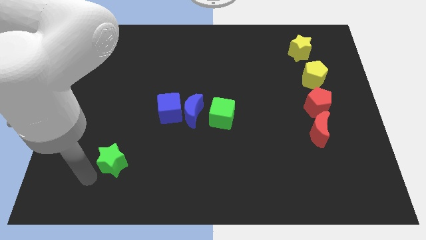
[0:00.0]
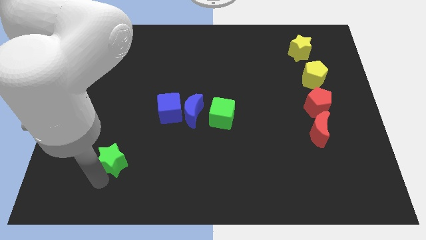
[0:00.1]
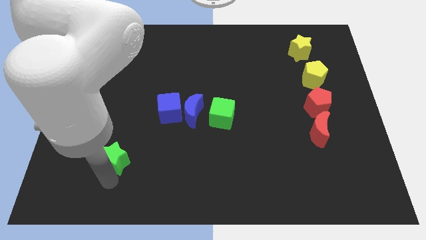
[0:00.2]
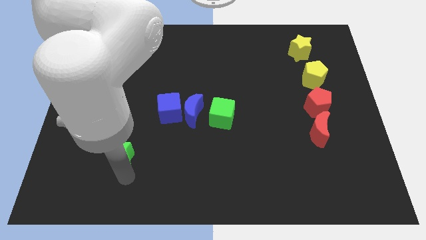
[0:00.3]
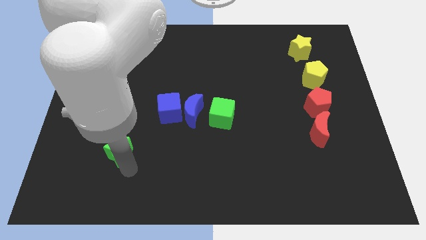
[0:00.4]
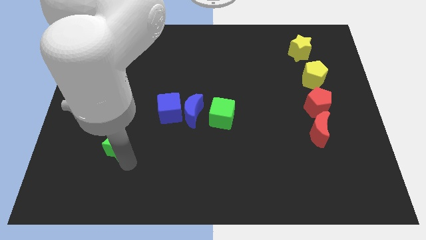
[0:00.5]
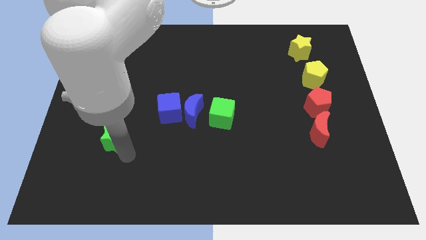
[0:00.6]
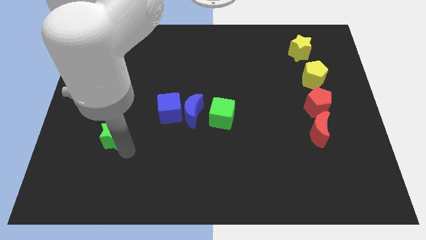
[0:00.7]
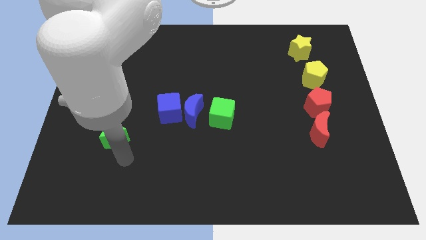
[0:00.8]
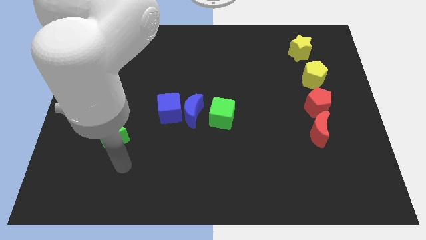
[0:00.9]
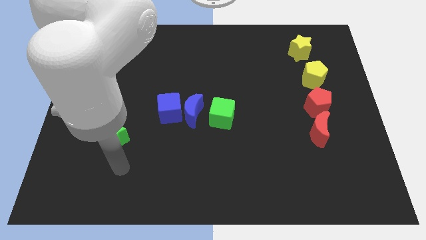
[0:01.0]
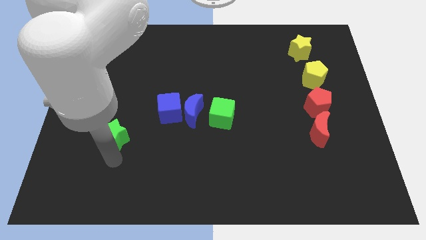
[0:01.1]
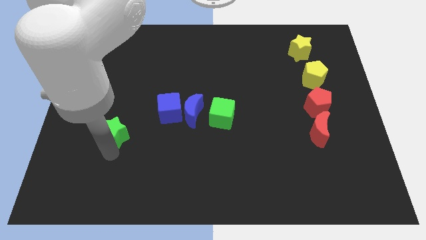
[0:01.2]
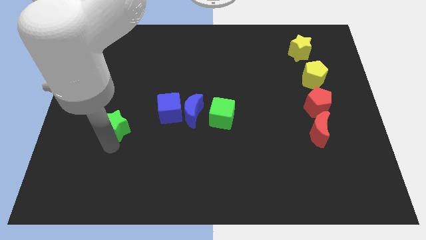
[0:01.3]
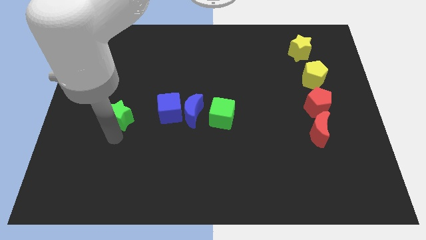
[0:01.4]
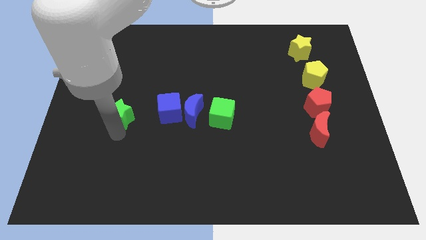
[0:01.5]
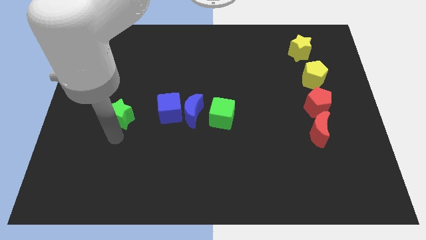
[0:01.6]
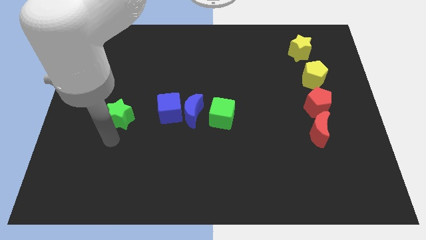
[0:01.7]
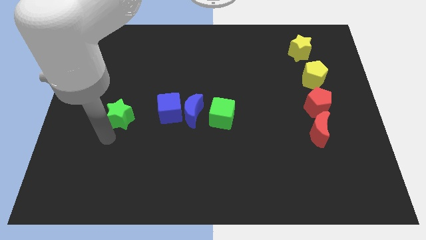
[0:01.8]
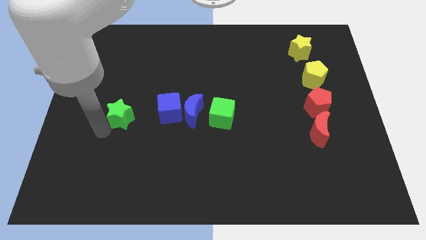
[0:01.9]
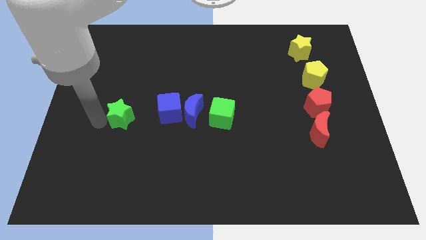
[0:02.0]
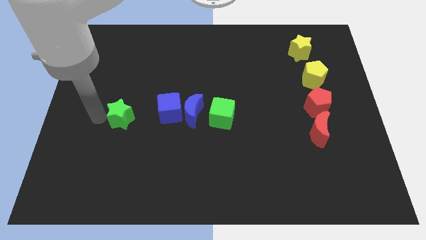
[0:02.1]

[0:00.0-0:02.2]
slide green star to left of blue cube

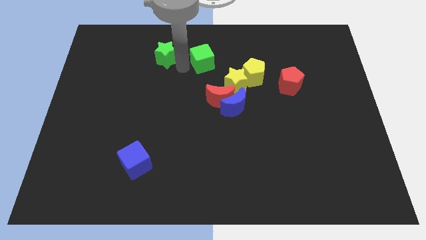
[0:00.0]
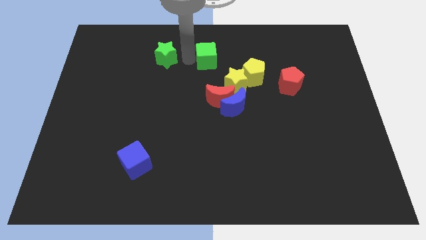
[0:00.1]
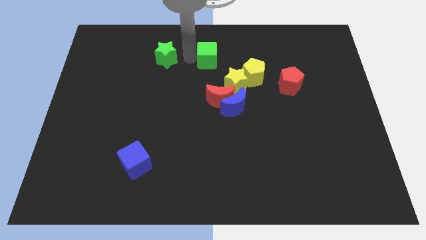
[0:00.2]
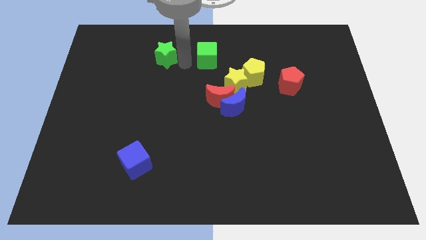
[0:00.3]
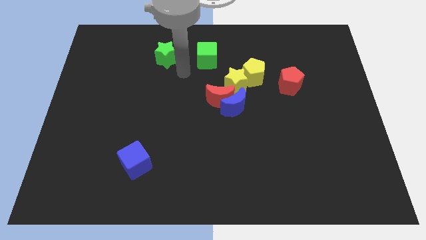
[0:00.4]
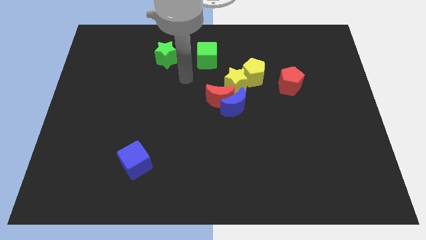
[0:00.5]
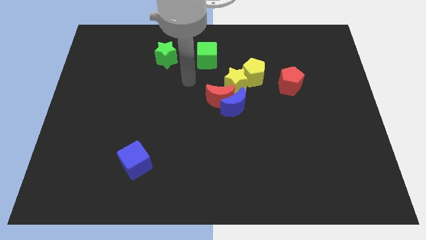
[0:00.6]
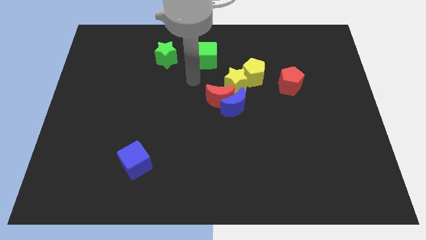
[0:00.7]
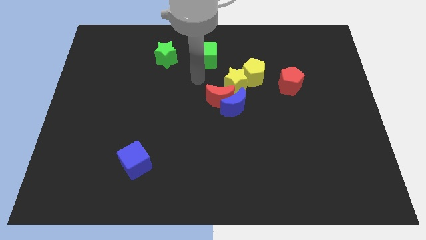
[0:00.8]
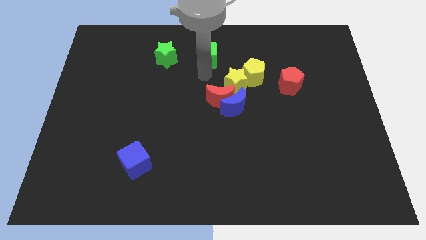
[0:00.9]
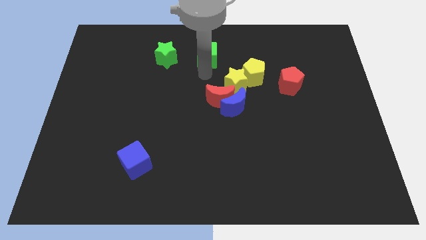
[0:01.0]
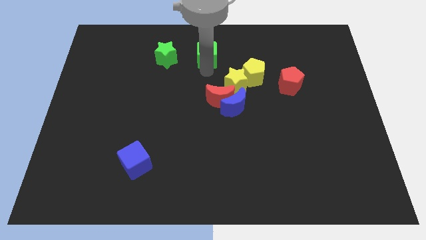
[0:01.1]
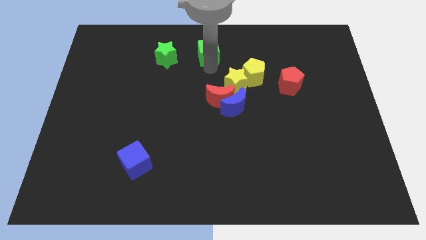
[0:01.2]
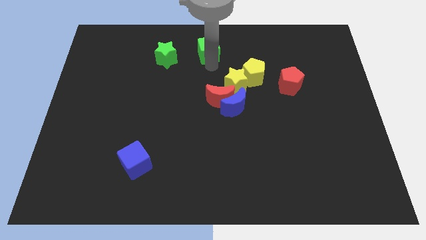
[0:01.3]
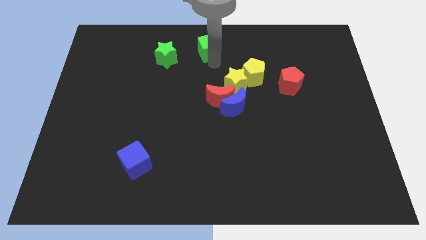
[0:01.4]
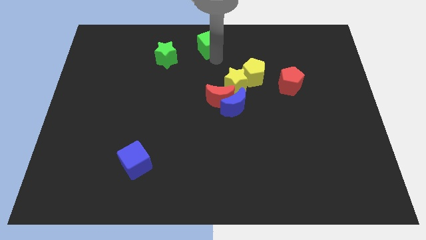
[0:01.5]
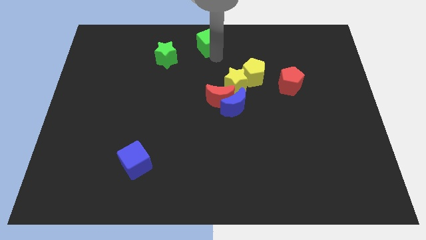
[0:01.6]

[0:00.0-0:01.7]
place green cube on the top center

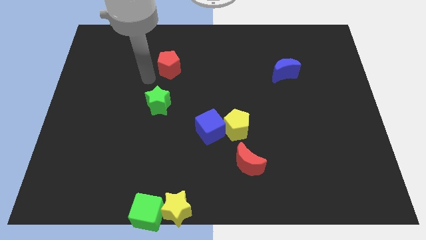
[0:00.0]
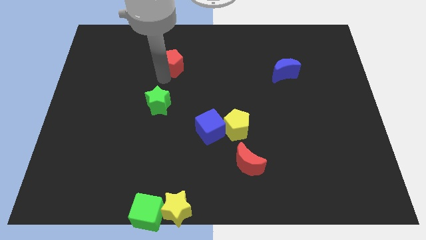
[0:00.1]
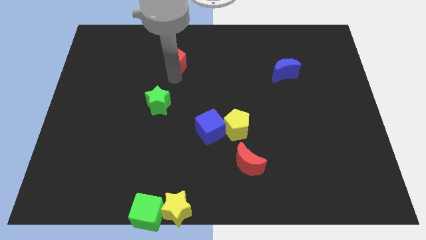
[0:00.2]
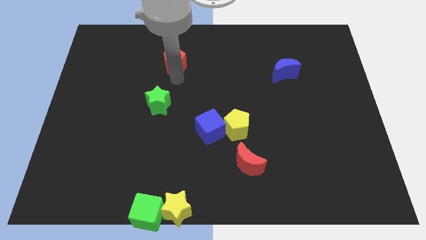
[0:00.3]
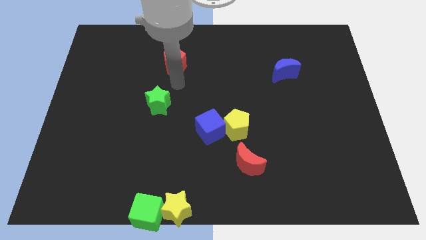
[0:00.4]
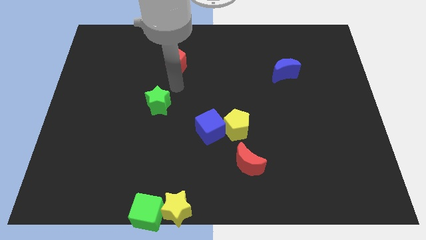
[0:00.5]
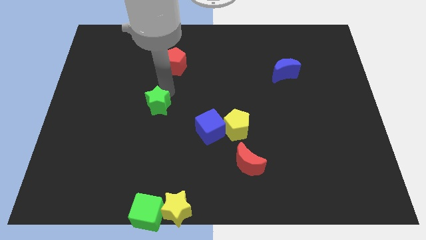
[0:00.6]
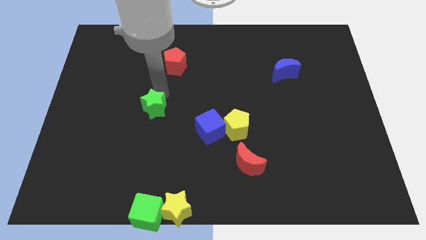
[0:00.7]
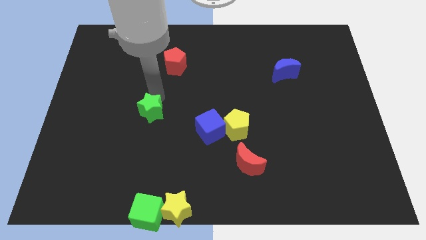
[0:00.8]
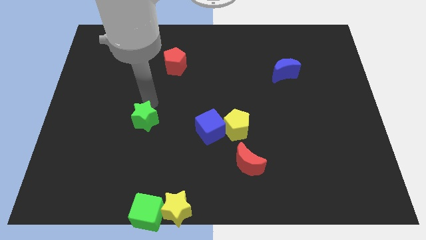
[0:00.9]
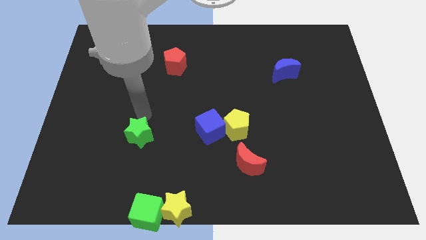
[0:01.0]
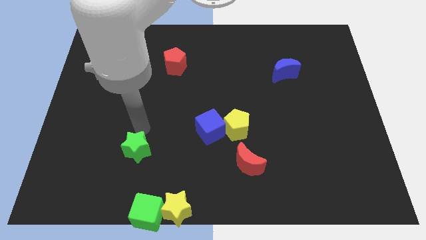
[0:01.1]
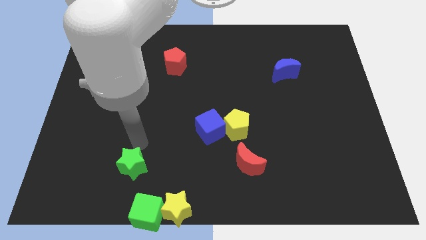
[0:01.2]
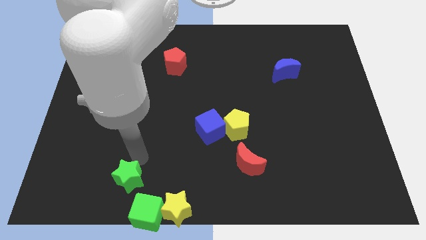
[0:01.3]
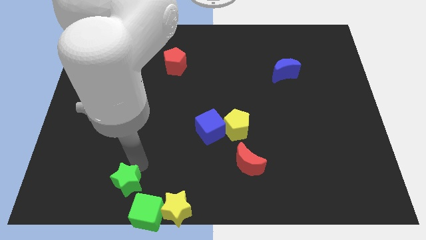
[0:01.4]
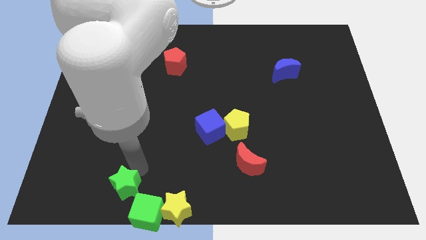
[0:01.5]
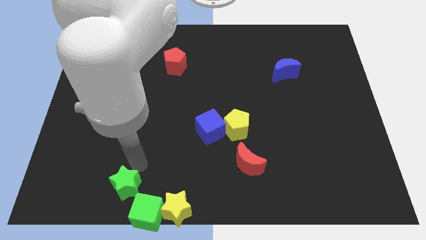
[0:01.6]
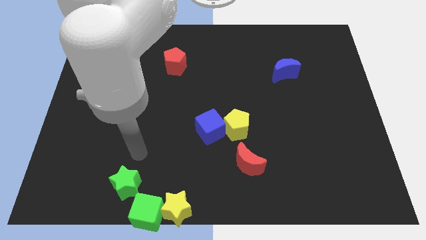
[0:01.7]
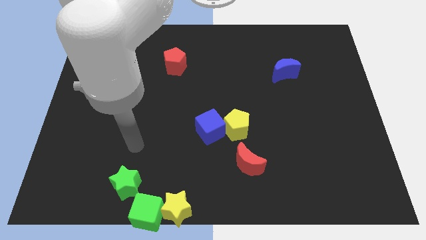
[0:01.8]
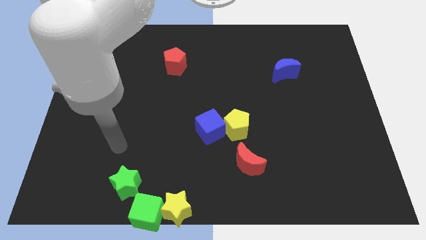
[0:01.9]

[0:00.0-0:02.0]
push the green star diagonally to the top left of the green cube

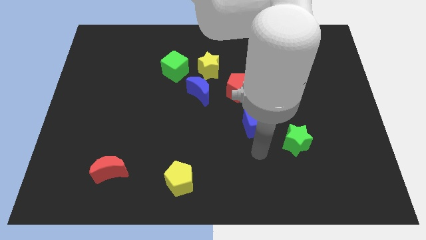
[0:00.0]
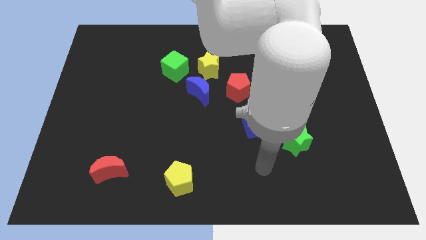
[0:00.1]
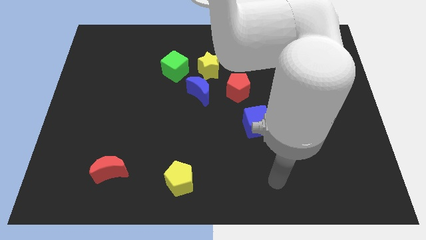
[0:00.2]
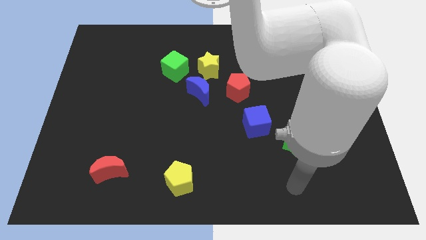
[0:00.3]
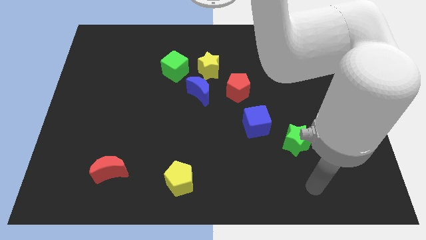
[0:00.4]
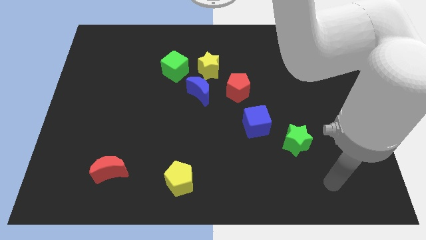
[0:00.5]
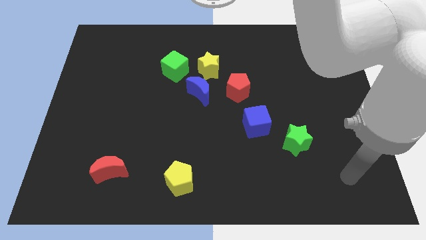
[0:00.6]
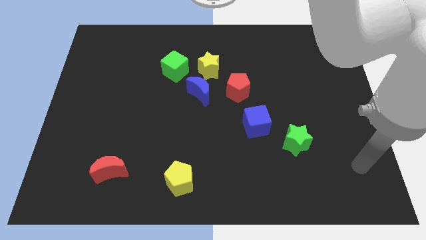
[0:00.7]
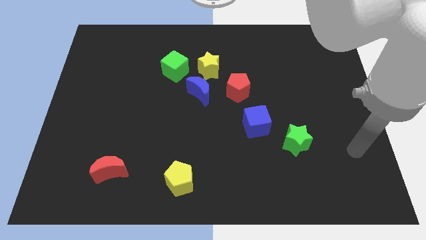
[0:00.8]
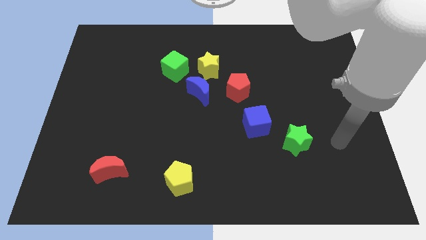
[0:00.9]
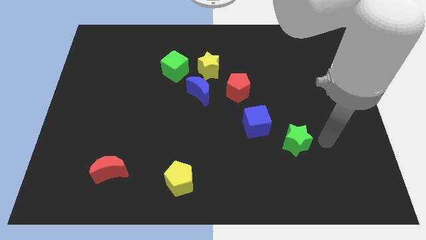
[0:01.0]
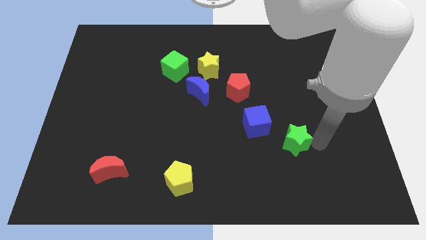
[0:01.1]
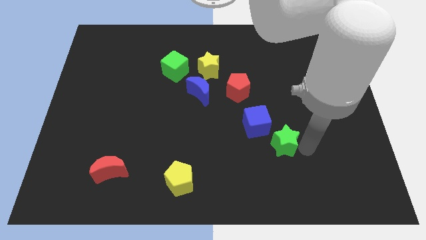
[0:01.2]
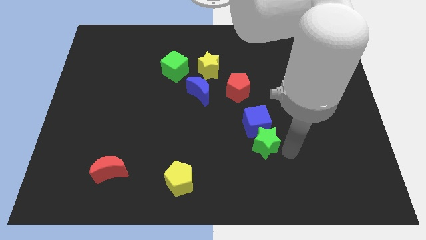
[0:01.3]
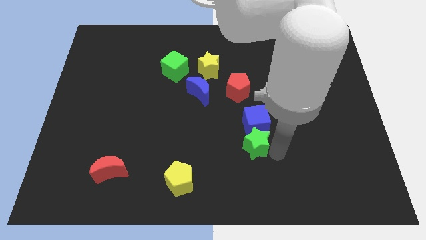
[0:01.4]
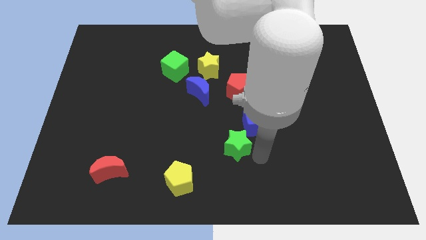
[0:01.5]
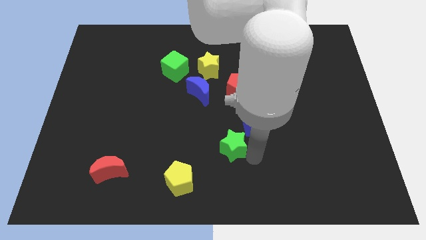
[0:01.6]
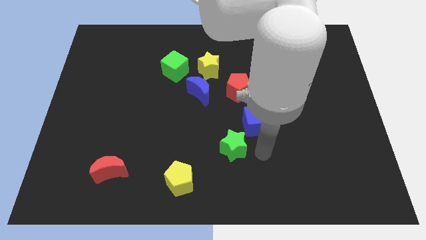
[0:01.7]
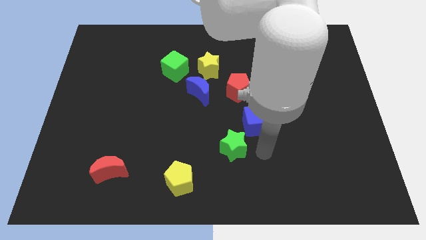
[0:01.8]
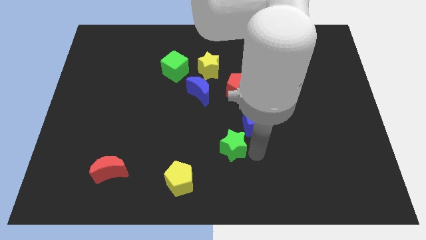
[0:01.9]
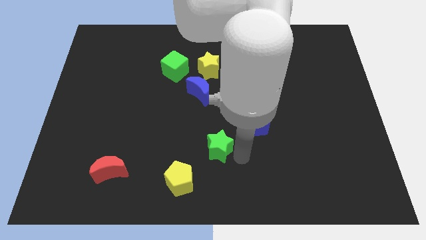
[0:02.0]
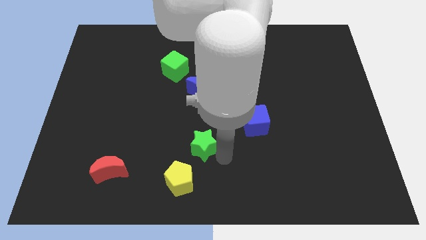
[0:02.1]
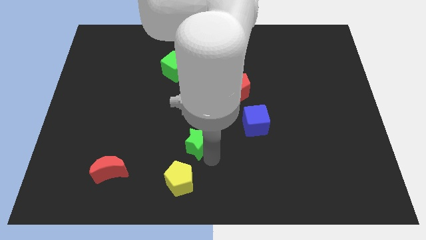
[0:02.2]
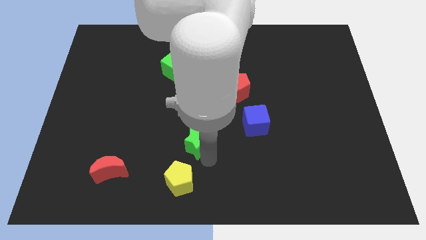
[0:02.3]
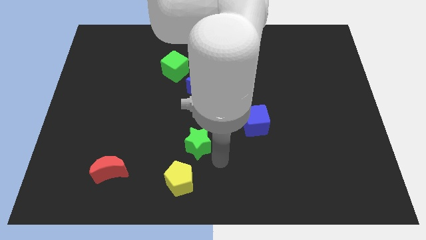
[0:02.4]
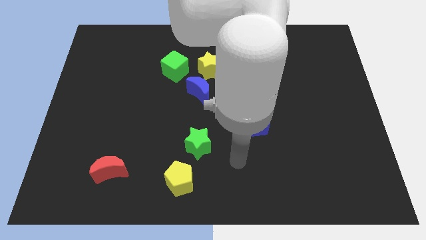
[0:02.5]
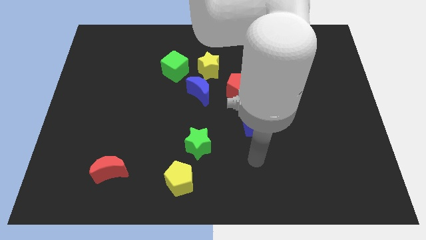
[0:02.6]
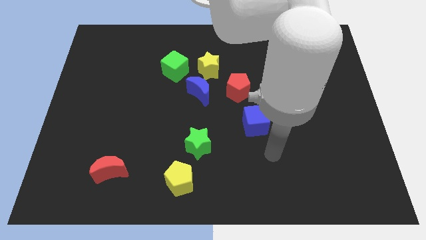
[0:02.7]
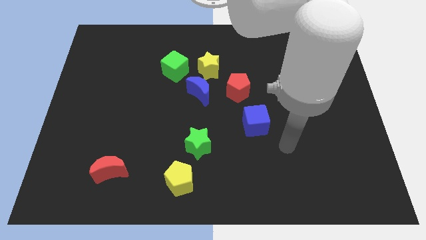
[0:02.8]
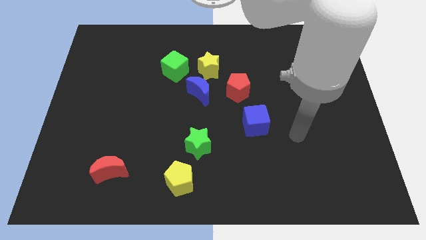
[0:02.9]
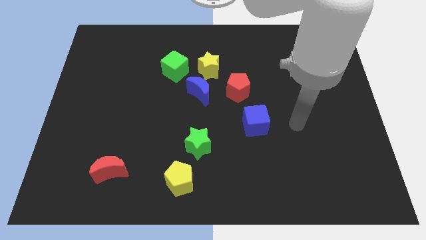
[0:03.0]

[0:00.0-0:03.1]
place the green star below the blue moon
